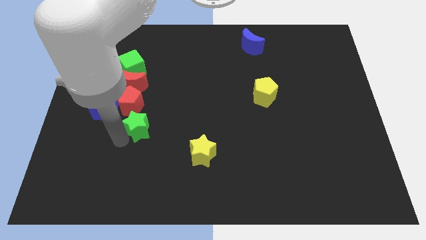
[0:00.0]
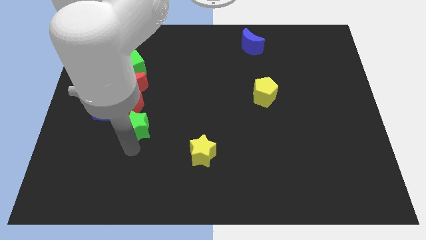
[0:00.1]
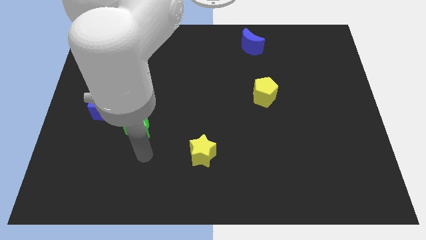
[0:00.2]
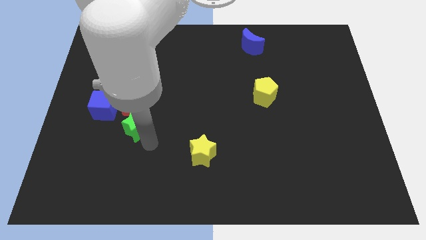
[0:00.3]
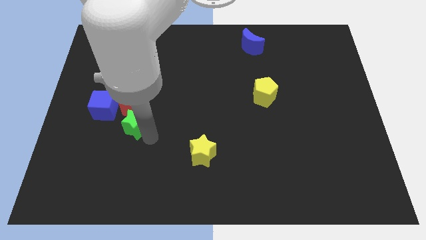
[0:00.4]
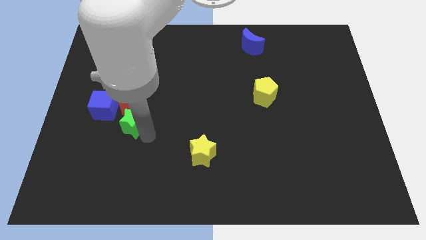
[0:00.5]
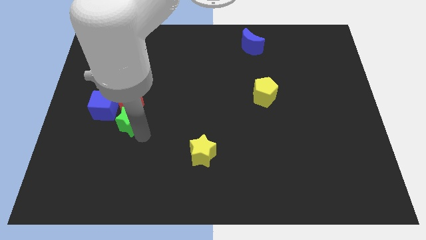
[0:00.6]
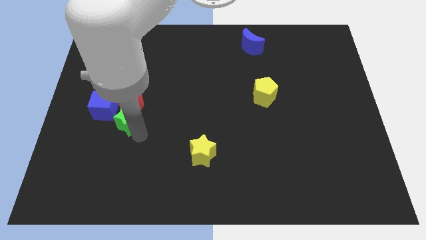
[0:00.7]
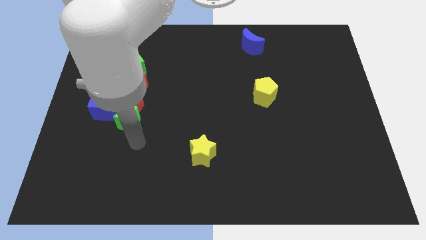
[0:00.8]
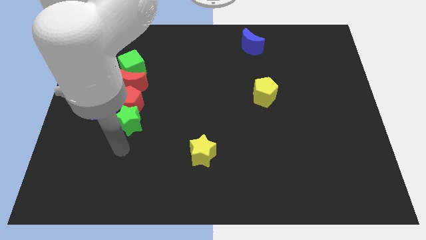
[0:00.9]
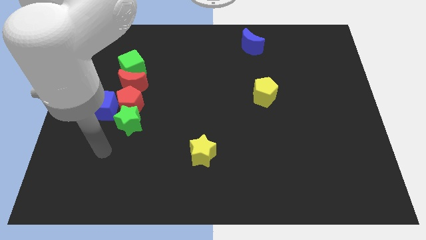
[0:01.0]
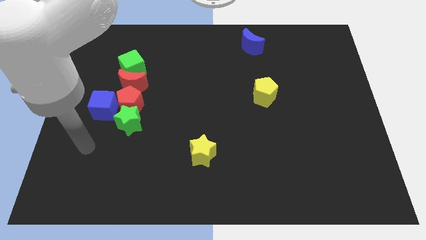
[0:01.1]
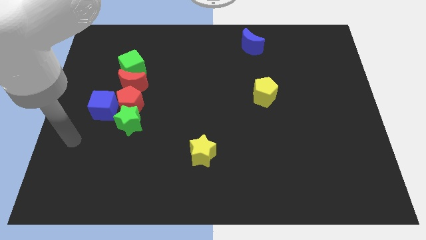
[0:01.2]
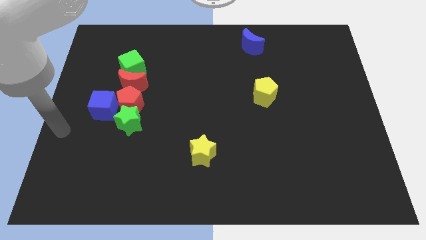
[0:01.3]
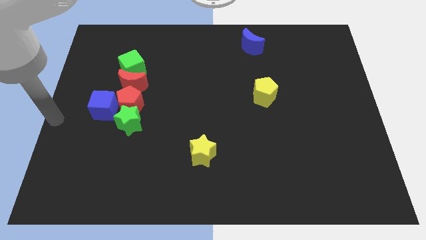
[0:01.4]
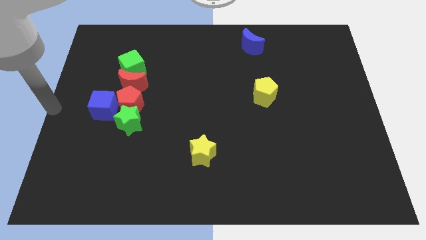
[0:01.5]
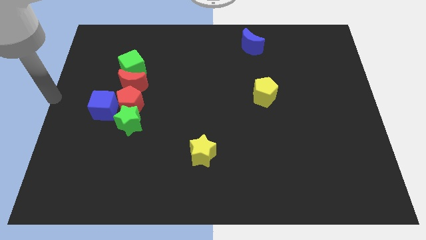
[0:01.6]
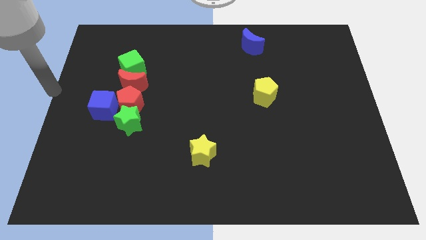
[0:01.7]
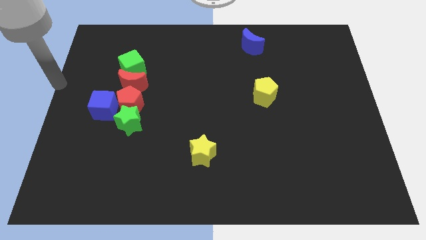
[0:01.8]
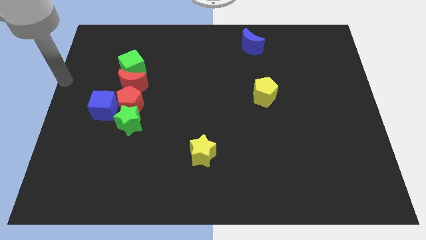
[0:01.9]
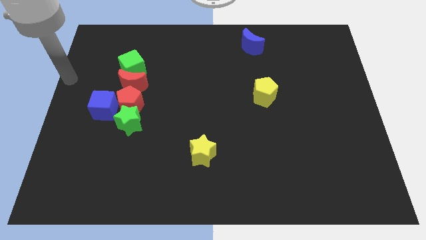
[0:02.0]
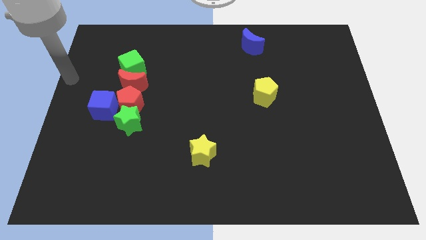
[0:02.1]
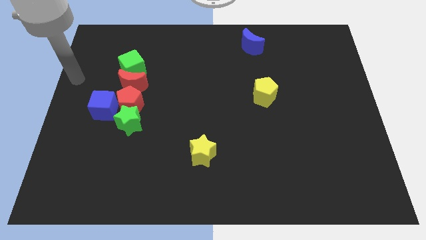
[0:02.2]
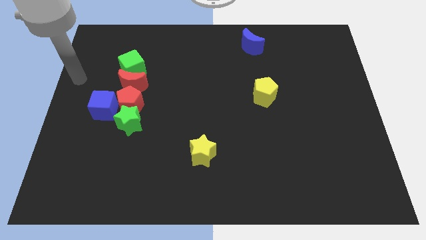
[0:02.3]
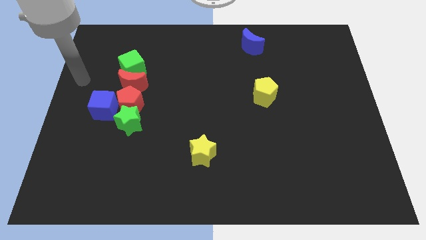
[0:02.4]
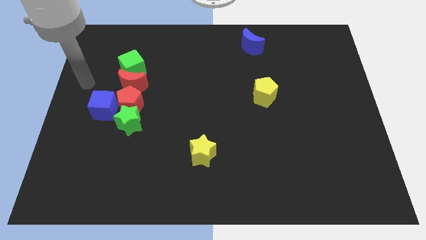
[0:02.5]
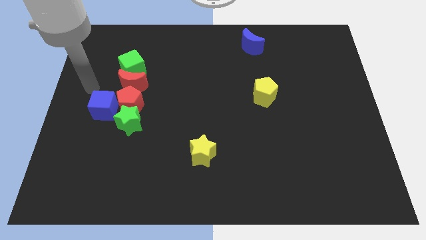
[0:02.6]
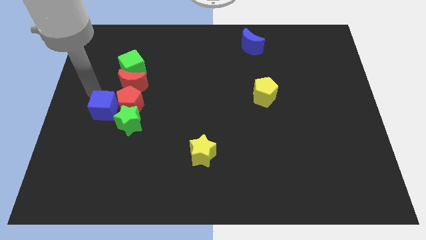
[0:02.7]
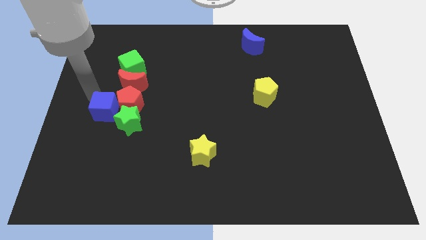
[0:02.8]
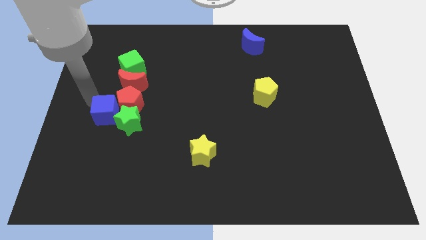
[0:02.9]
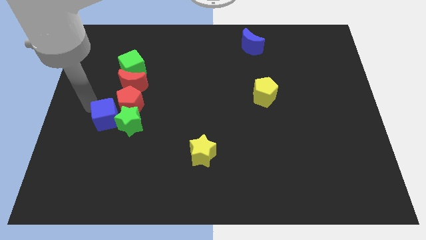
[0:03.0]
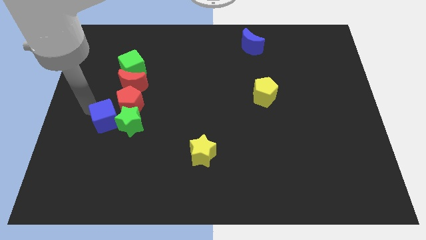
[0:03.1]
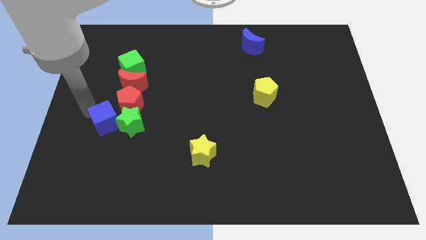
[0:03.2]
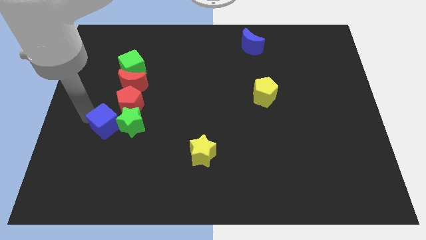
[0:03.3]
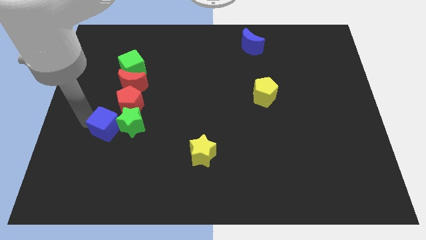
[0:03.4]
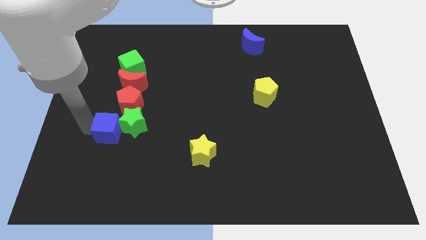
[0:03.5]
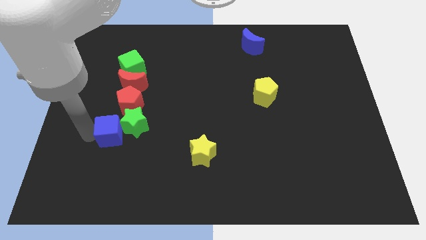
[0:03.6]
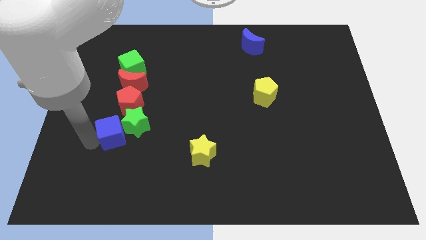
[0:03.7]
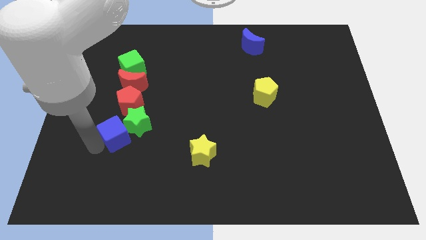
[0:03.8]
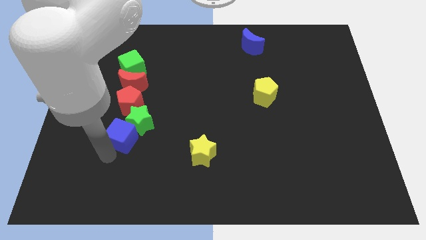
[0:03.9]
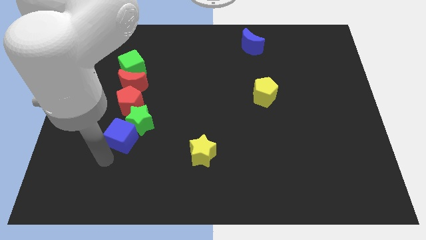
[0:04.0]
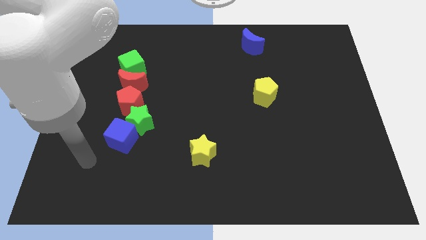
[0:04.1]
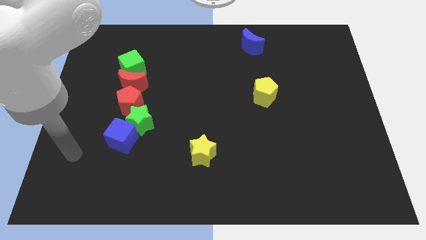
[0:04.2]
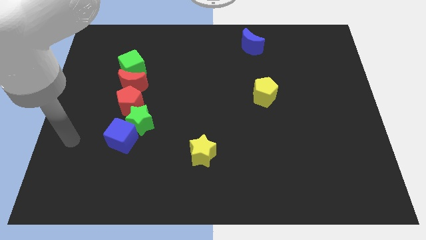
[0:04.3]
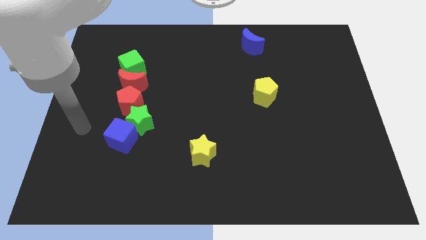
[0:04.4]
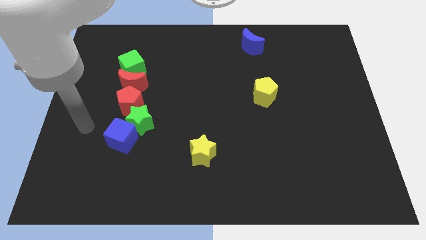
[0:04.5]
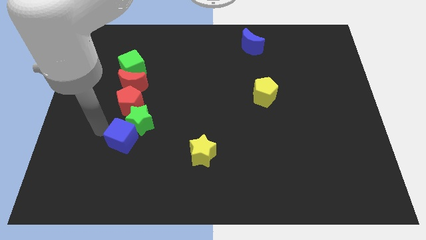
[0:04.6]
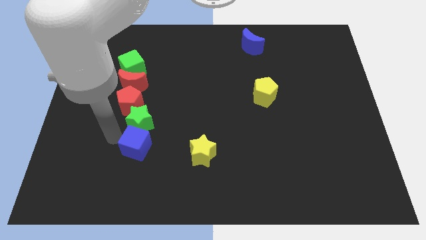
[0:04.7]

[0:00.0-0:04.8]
push the blue cube into the green star

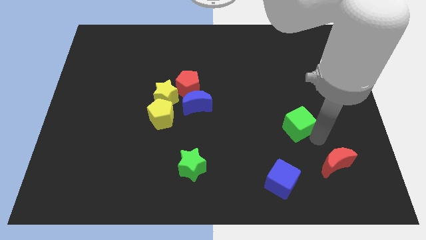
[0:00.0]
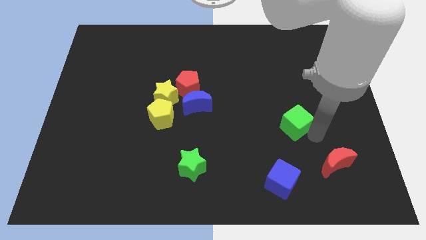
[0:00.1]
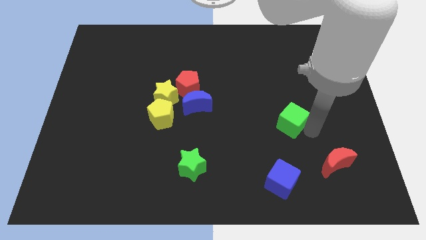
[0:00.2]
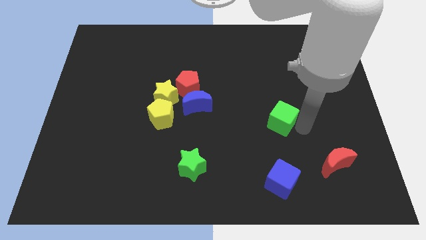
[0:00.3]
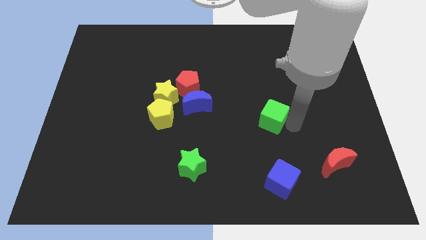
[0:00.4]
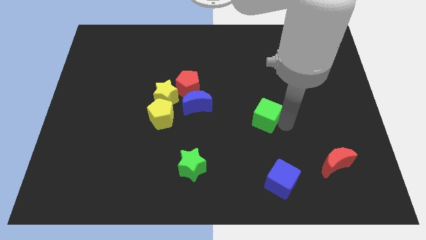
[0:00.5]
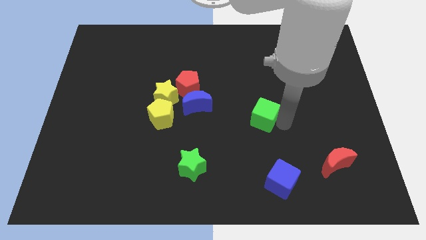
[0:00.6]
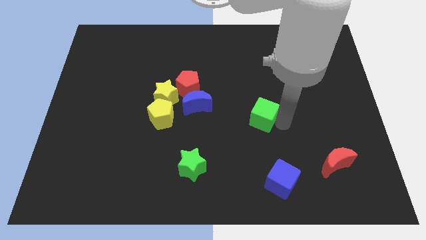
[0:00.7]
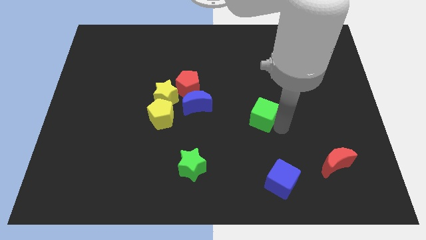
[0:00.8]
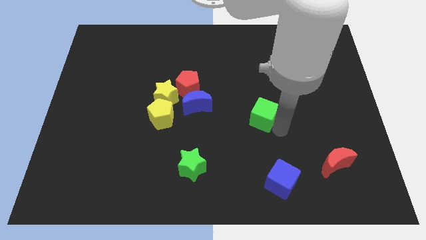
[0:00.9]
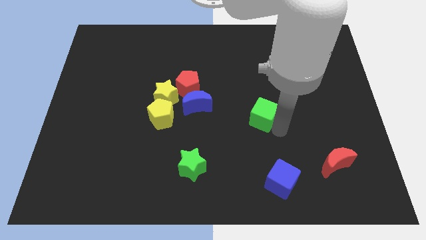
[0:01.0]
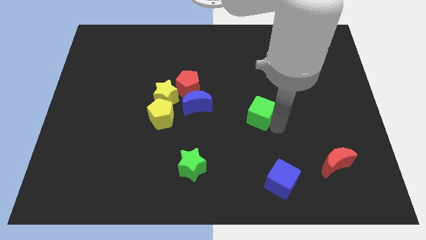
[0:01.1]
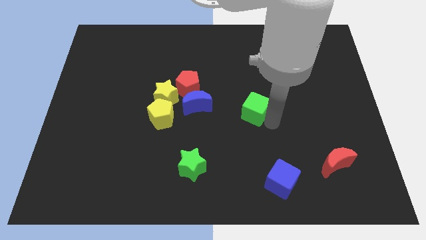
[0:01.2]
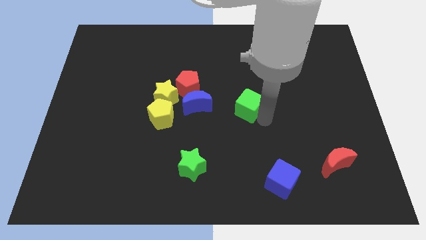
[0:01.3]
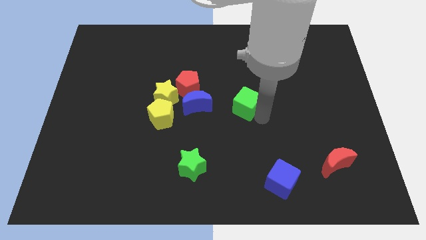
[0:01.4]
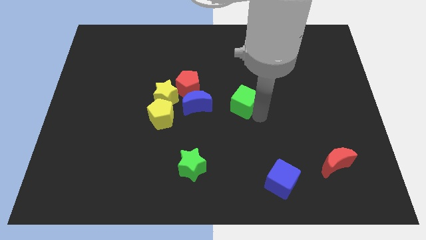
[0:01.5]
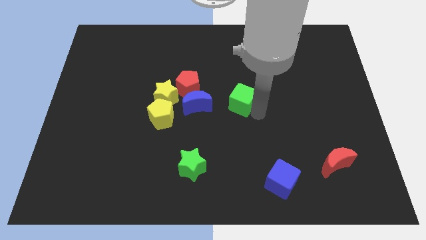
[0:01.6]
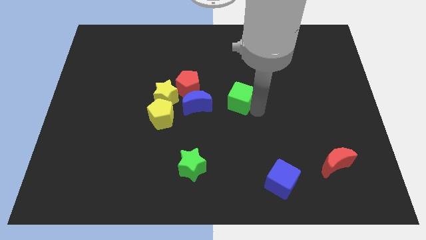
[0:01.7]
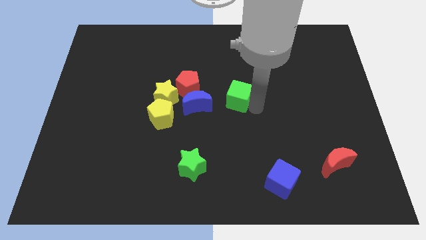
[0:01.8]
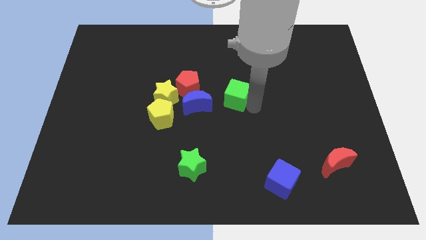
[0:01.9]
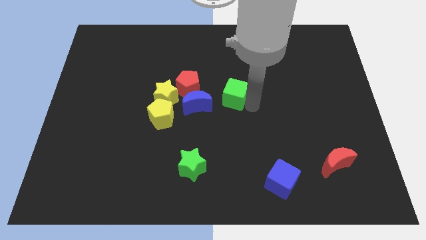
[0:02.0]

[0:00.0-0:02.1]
push the green cube towards the center

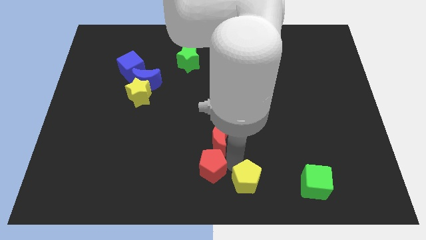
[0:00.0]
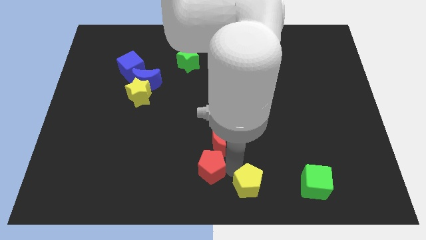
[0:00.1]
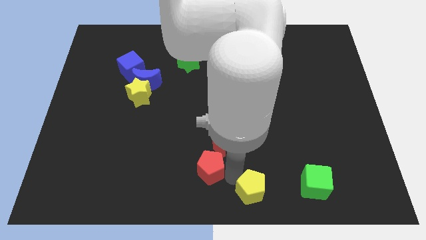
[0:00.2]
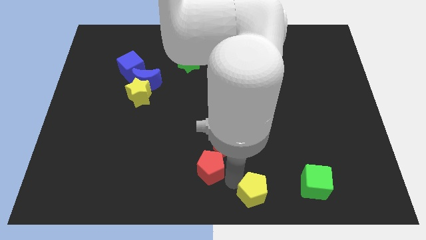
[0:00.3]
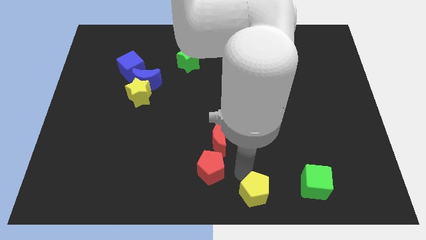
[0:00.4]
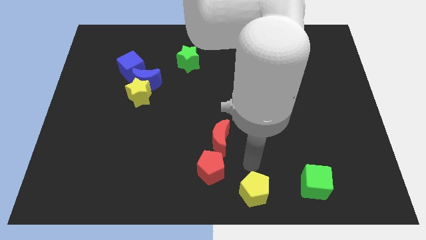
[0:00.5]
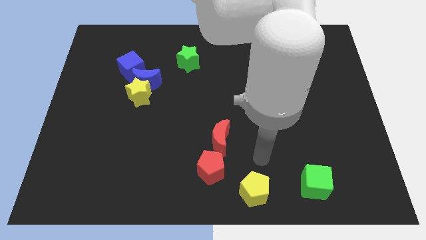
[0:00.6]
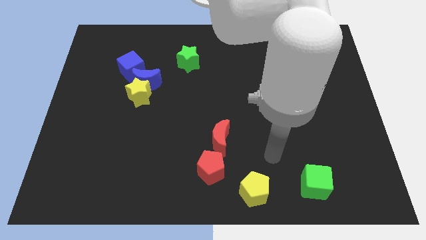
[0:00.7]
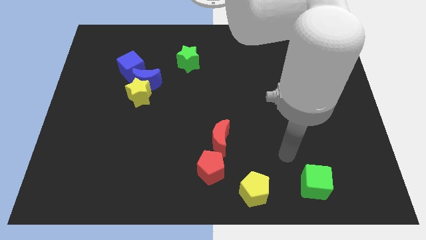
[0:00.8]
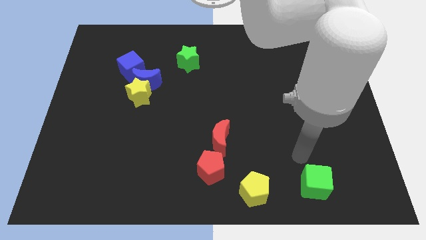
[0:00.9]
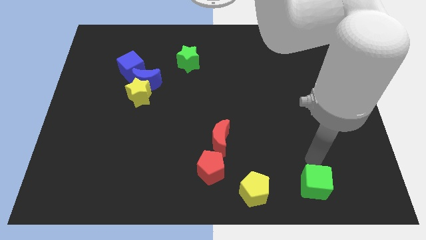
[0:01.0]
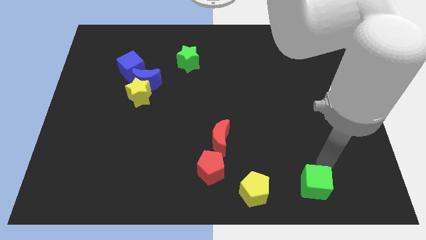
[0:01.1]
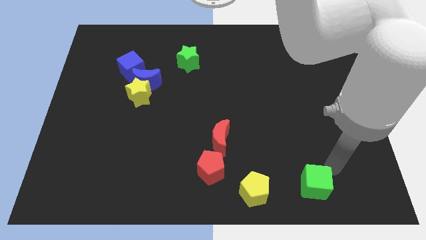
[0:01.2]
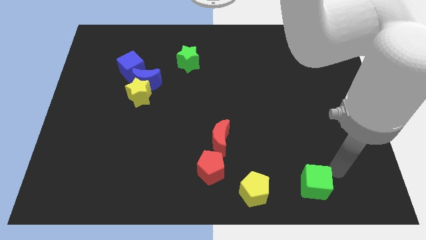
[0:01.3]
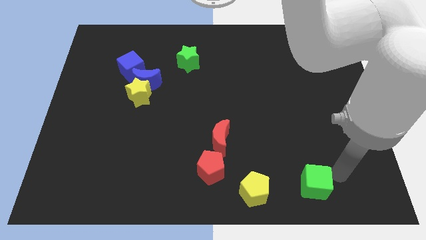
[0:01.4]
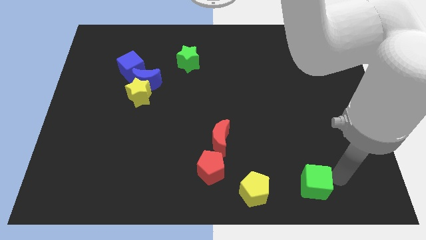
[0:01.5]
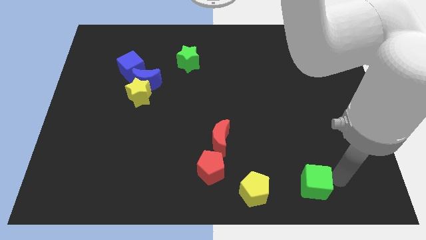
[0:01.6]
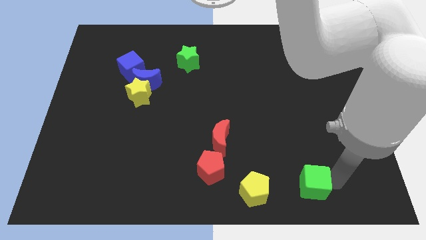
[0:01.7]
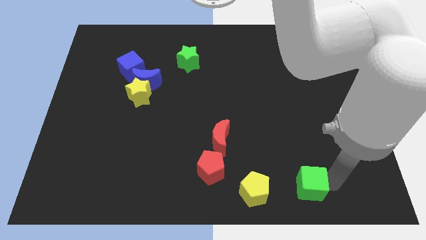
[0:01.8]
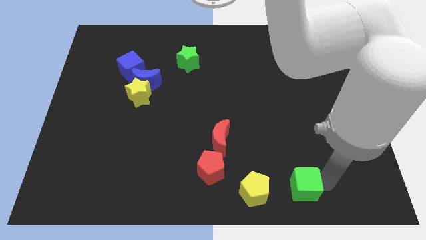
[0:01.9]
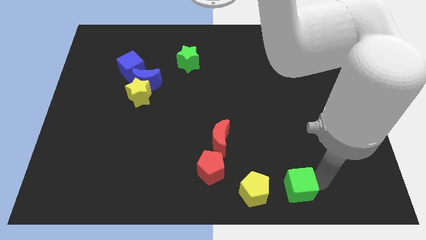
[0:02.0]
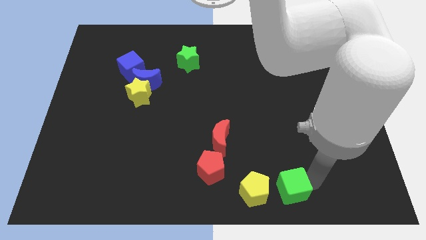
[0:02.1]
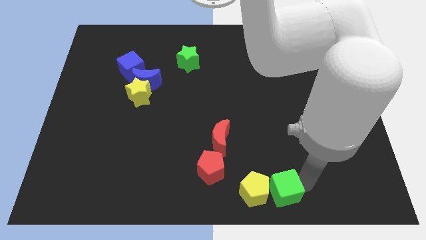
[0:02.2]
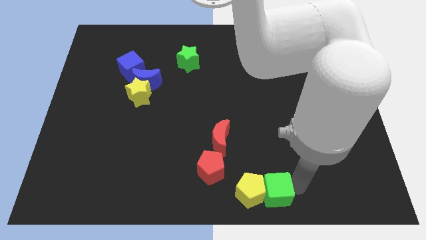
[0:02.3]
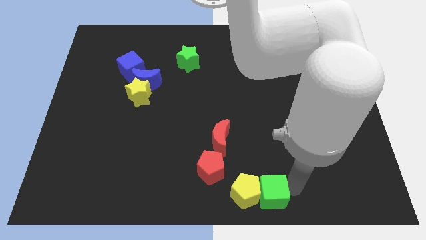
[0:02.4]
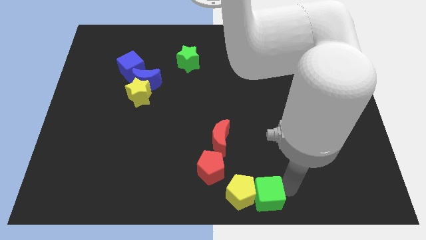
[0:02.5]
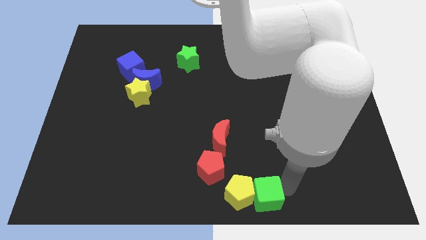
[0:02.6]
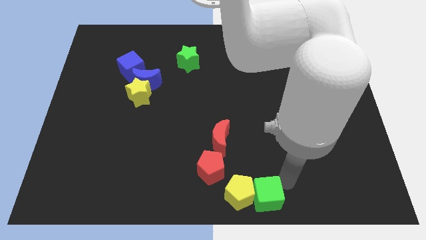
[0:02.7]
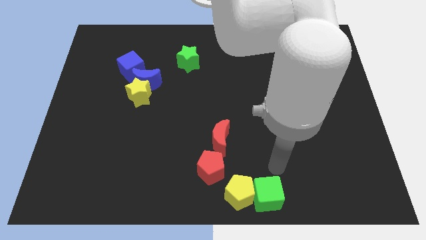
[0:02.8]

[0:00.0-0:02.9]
move green cube into right of the yellow pentagon
